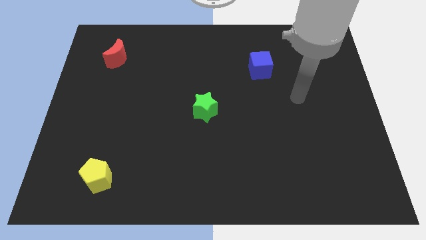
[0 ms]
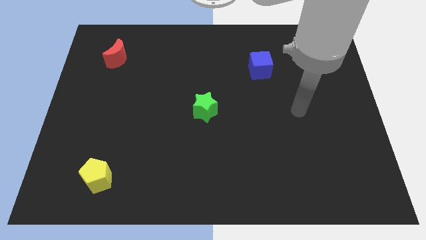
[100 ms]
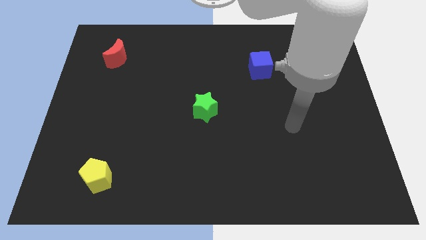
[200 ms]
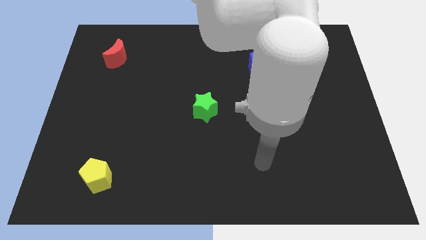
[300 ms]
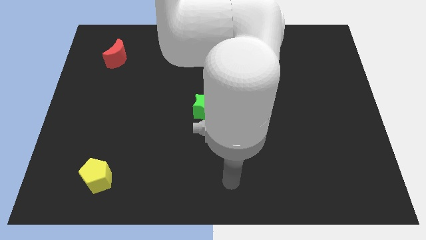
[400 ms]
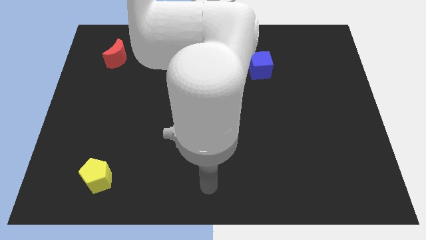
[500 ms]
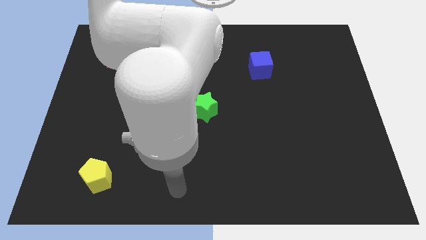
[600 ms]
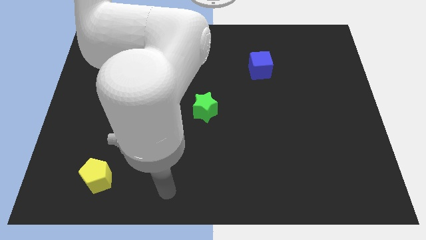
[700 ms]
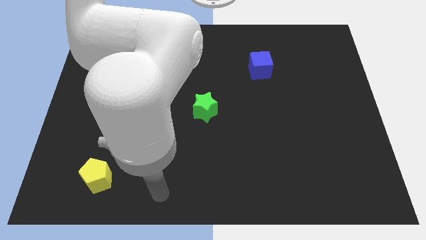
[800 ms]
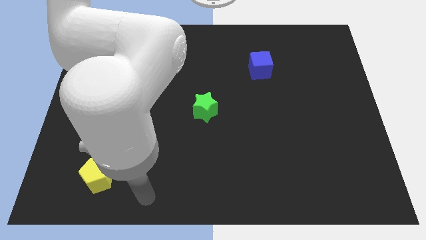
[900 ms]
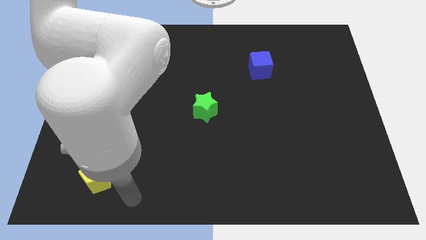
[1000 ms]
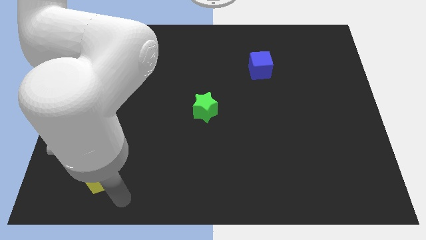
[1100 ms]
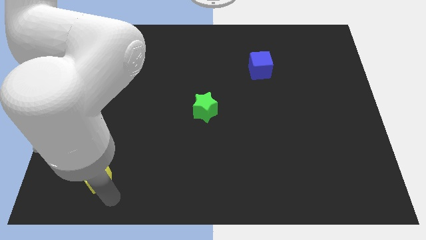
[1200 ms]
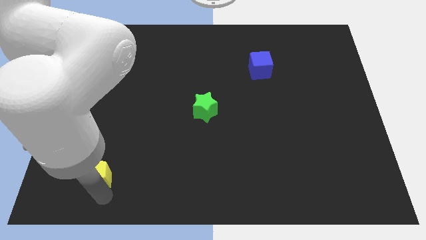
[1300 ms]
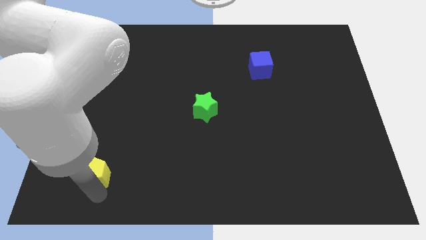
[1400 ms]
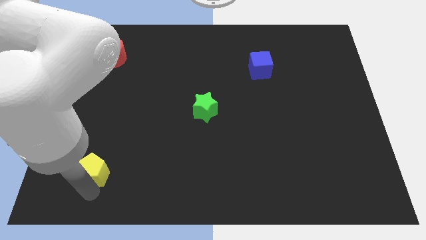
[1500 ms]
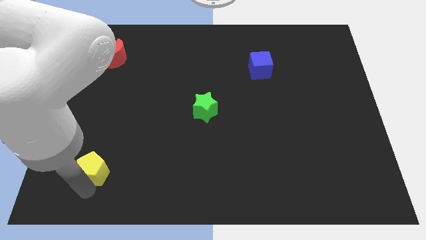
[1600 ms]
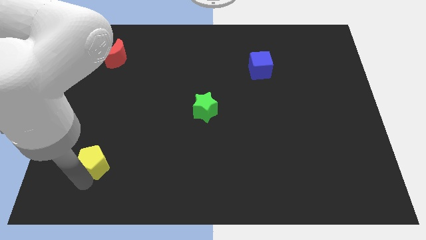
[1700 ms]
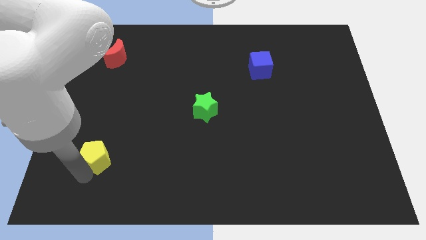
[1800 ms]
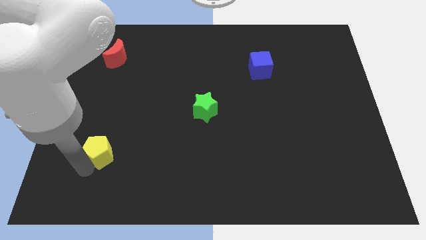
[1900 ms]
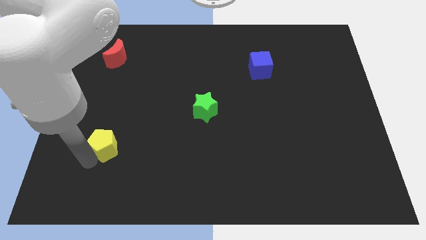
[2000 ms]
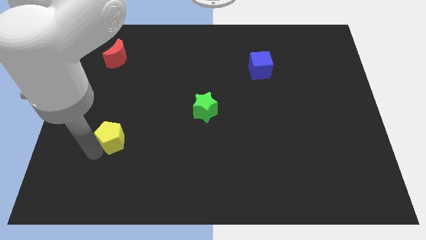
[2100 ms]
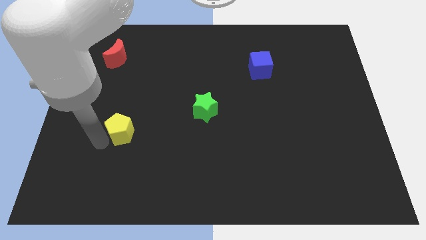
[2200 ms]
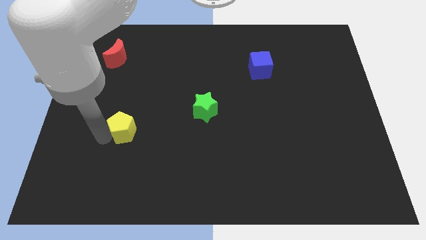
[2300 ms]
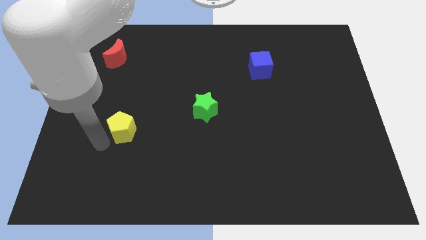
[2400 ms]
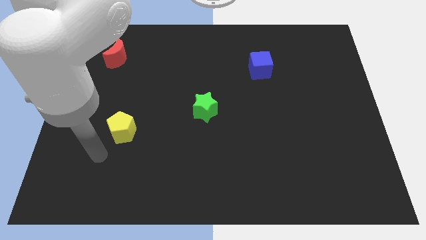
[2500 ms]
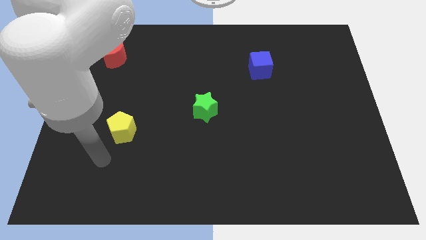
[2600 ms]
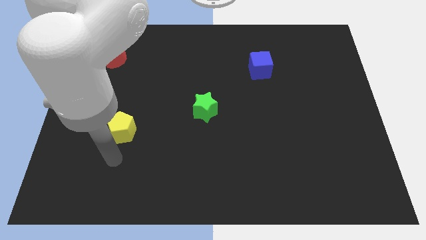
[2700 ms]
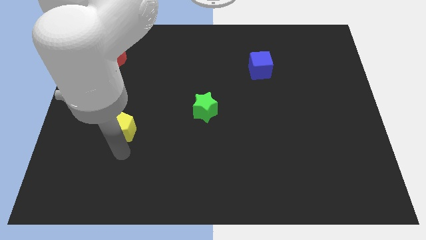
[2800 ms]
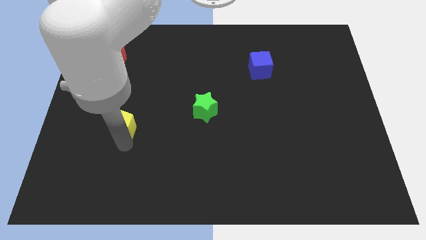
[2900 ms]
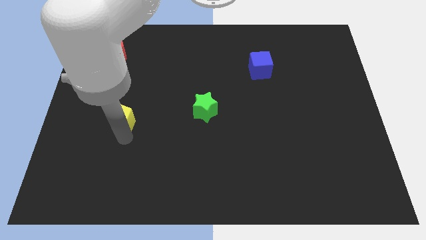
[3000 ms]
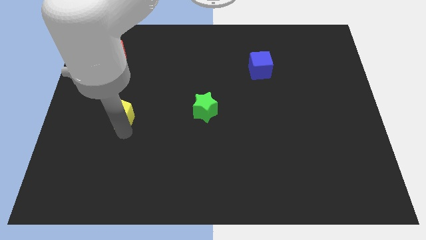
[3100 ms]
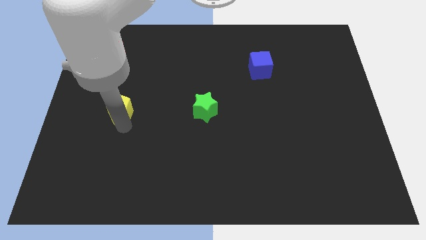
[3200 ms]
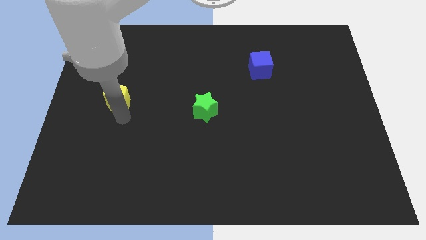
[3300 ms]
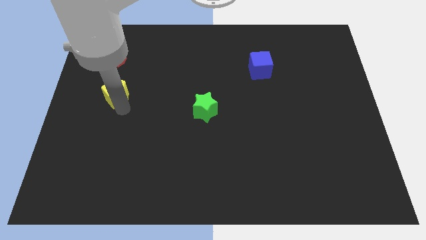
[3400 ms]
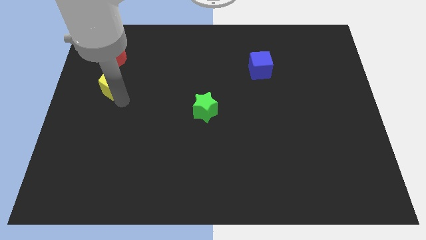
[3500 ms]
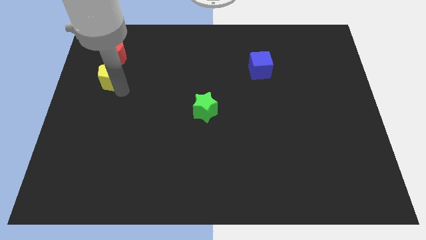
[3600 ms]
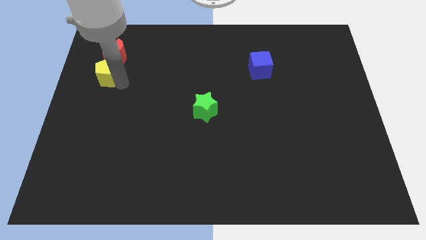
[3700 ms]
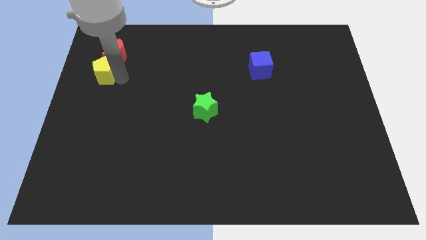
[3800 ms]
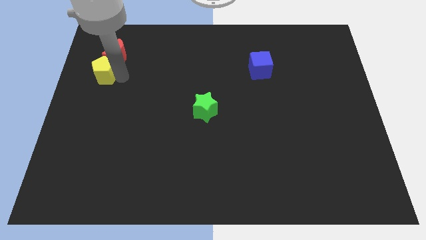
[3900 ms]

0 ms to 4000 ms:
move the yellow pentagon to the moon

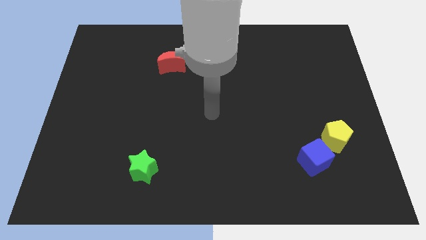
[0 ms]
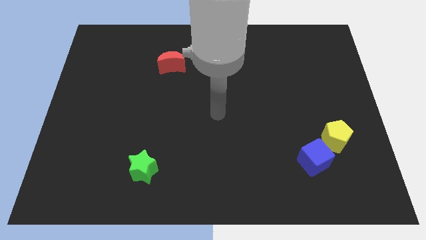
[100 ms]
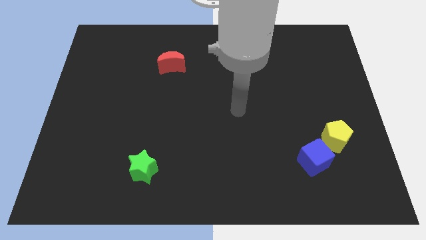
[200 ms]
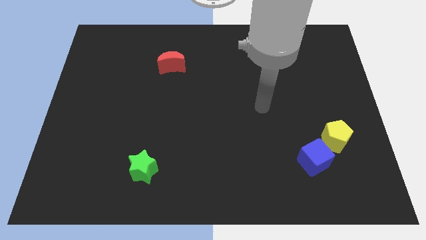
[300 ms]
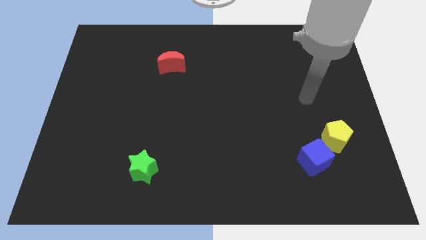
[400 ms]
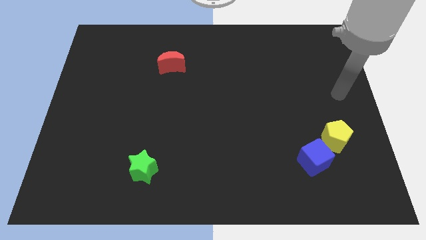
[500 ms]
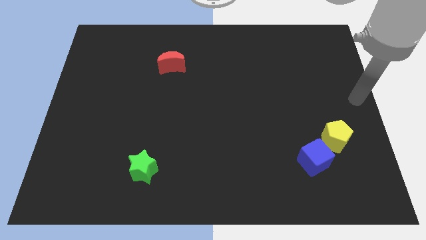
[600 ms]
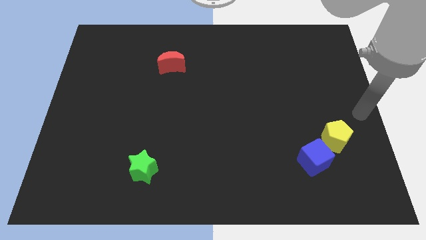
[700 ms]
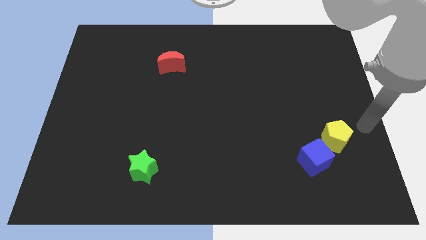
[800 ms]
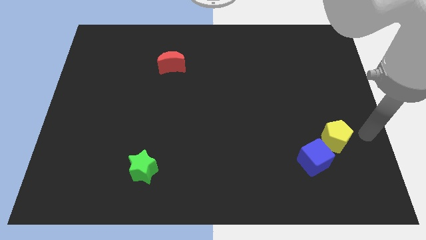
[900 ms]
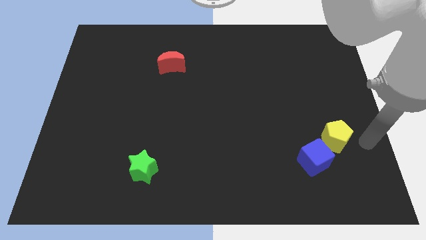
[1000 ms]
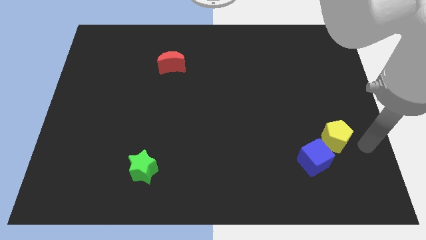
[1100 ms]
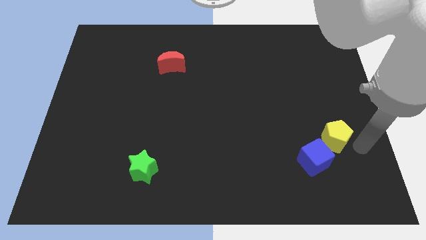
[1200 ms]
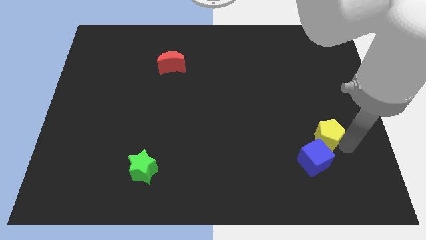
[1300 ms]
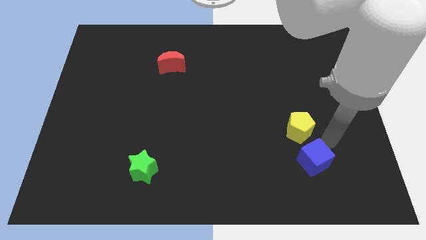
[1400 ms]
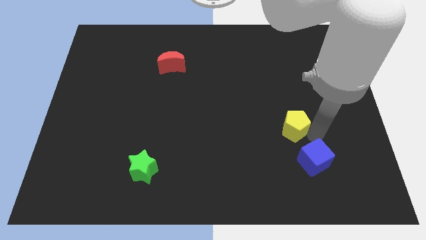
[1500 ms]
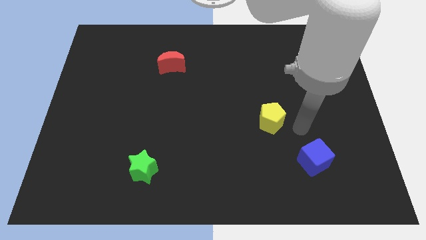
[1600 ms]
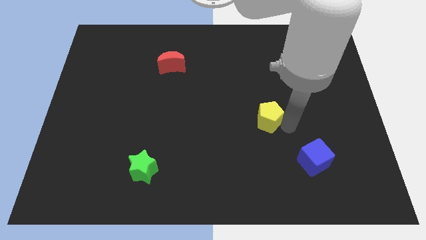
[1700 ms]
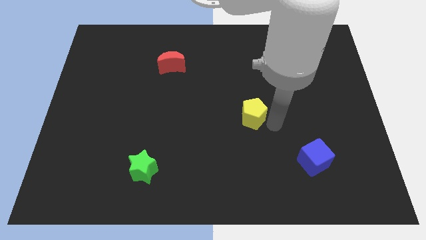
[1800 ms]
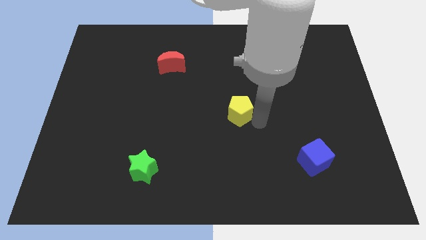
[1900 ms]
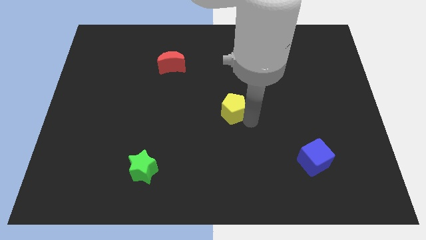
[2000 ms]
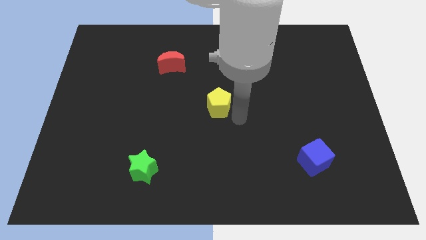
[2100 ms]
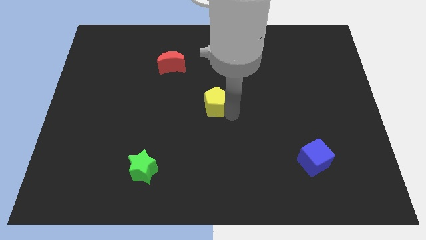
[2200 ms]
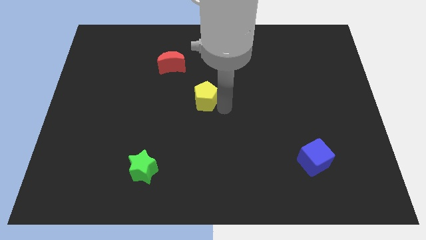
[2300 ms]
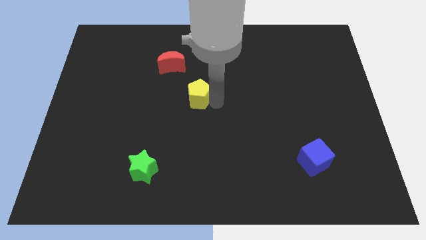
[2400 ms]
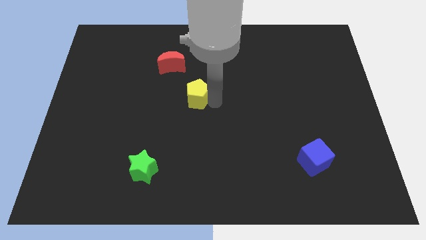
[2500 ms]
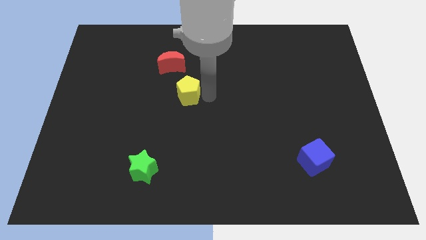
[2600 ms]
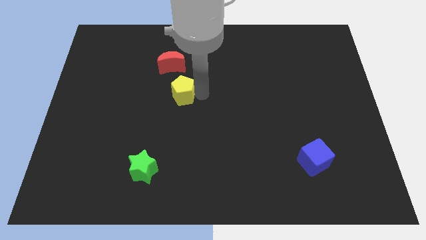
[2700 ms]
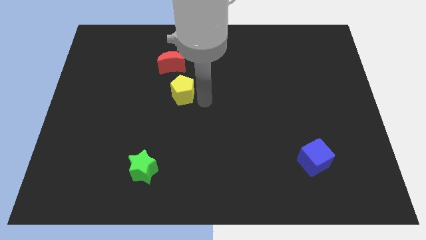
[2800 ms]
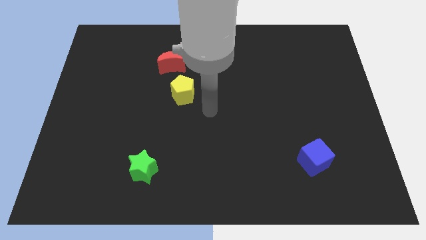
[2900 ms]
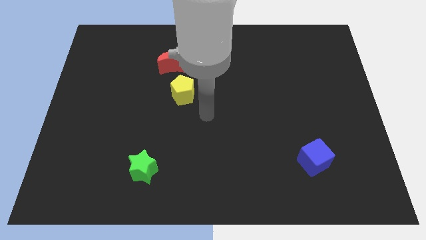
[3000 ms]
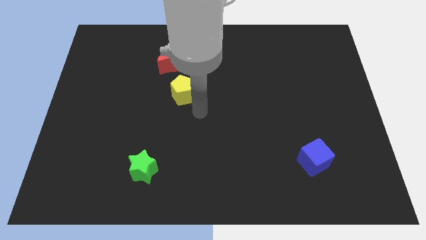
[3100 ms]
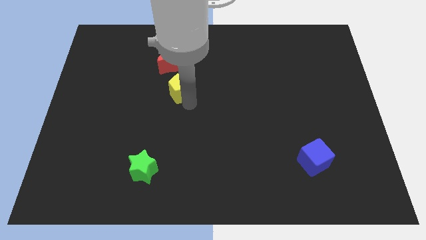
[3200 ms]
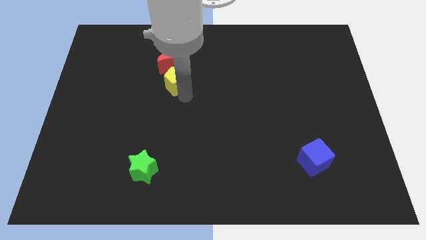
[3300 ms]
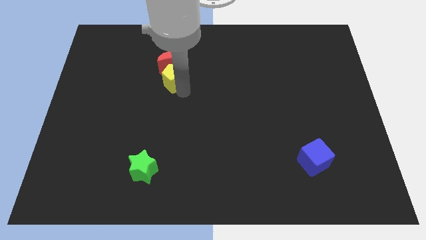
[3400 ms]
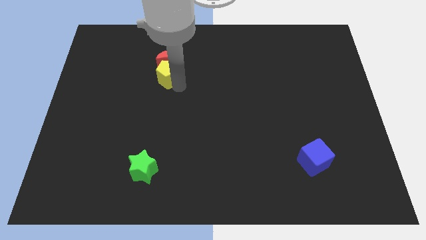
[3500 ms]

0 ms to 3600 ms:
move the pentagon towards the red block

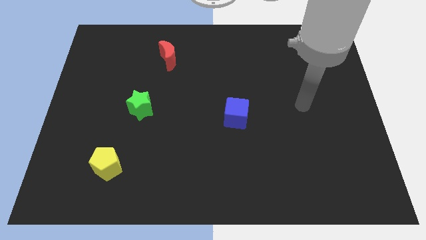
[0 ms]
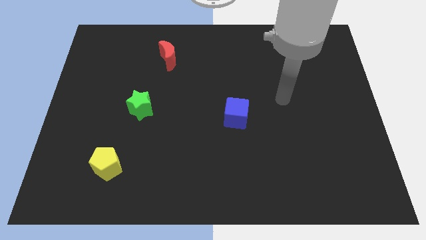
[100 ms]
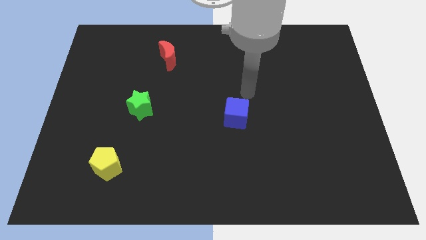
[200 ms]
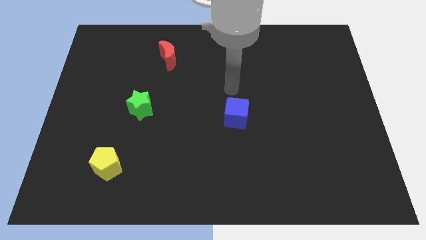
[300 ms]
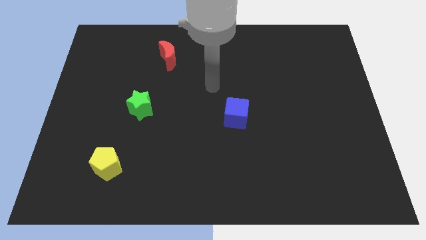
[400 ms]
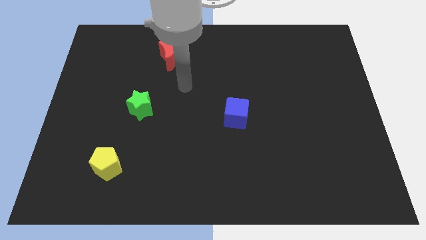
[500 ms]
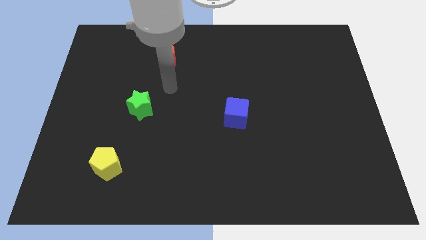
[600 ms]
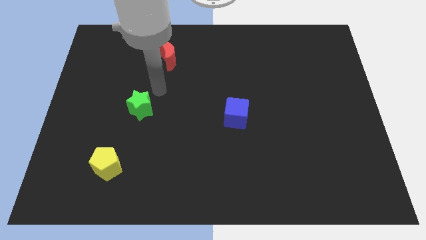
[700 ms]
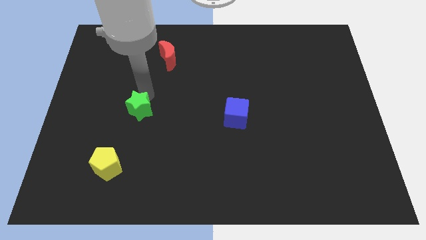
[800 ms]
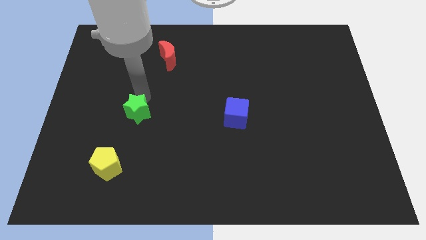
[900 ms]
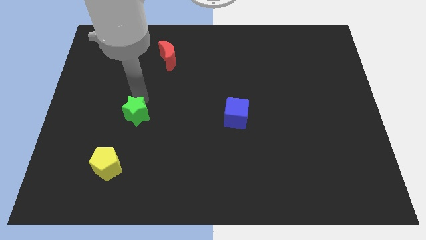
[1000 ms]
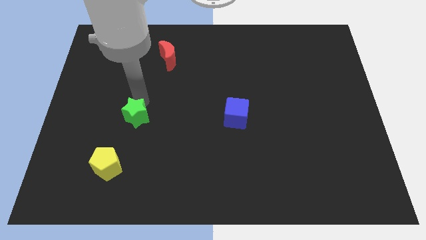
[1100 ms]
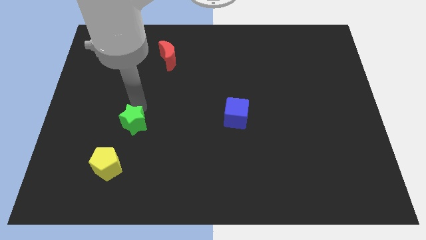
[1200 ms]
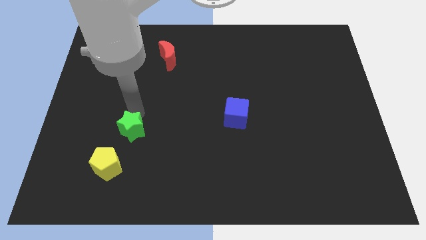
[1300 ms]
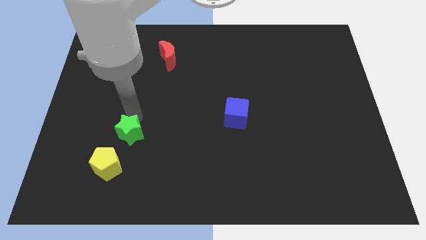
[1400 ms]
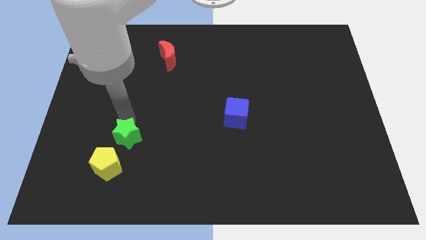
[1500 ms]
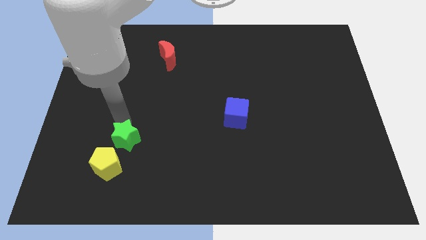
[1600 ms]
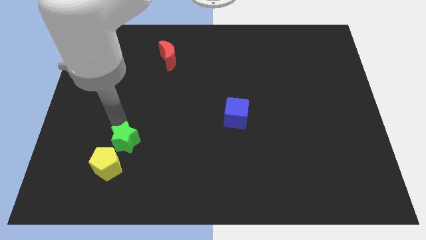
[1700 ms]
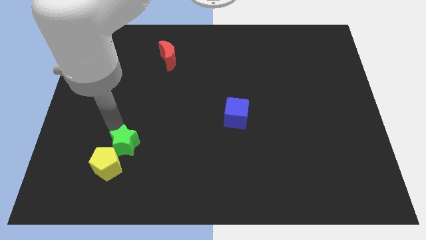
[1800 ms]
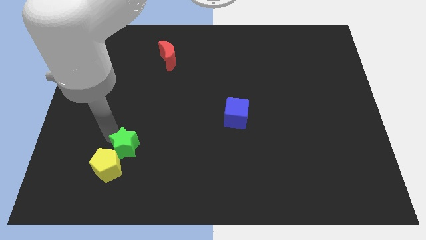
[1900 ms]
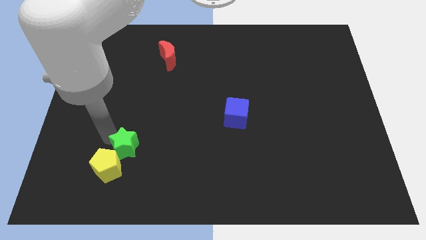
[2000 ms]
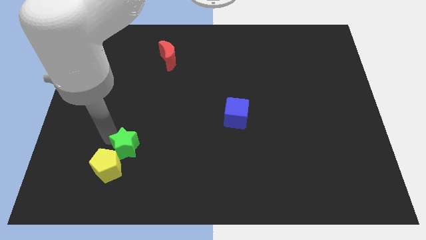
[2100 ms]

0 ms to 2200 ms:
push the green block next to the yellow pentagon
